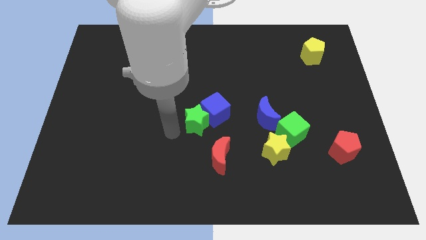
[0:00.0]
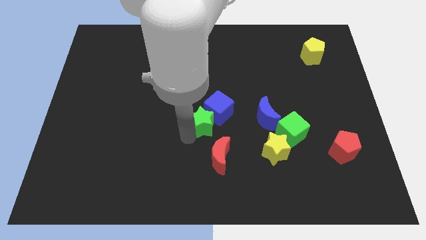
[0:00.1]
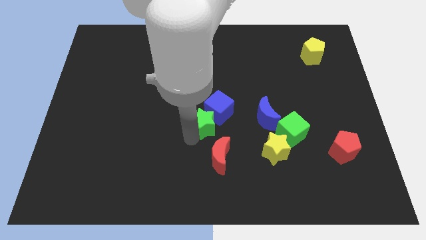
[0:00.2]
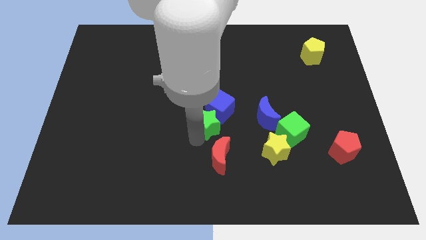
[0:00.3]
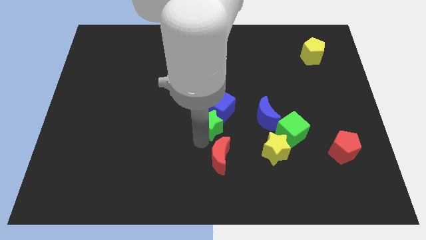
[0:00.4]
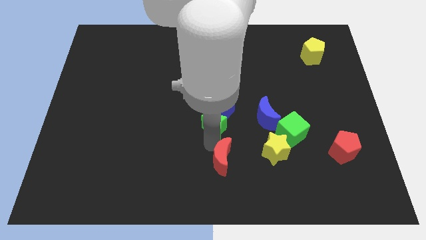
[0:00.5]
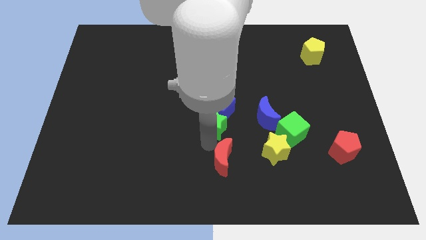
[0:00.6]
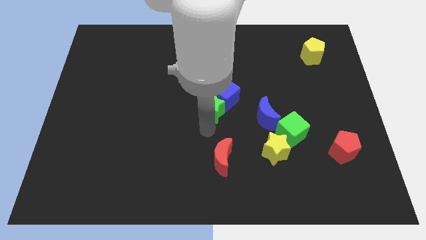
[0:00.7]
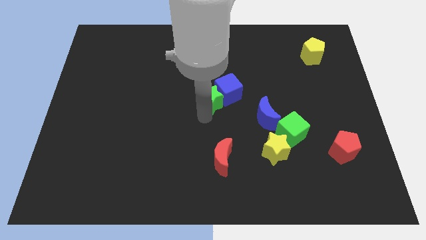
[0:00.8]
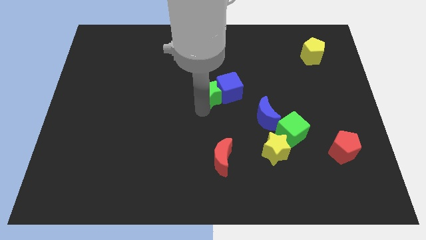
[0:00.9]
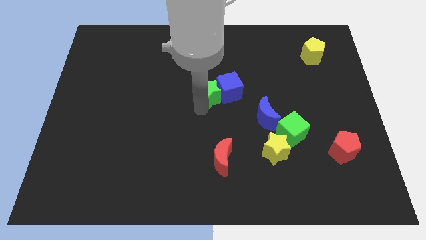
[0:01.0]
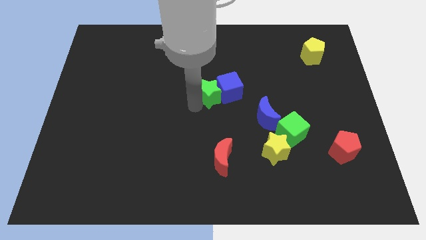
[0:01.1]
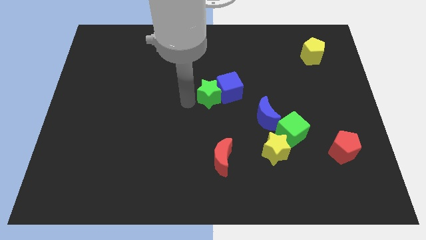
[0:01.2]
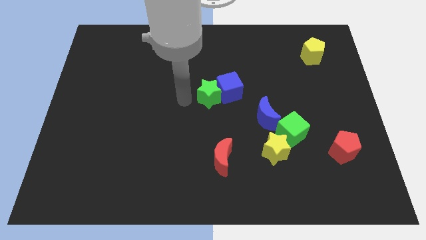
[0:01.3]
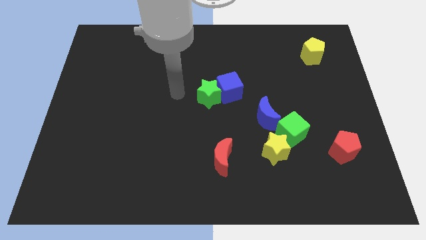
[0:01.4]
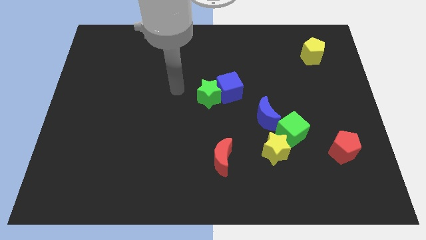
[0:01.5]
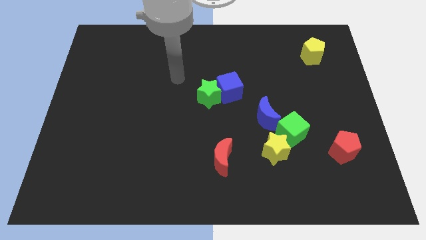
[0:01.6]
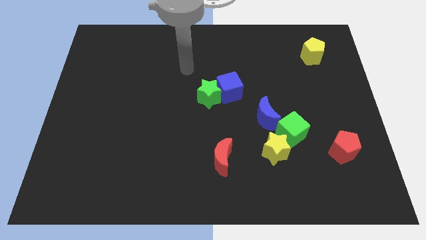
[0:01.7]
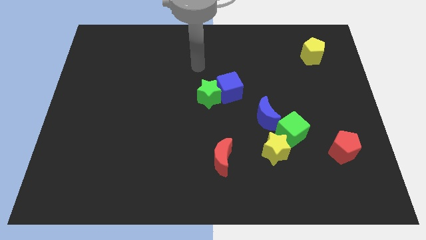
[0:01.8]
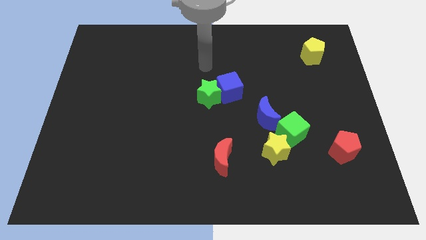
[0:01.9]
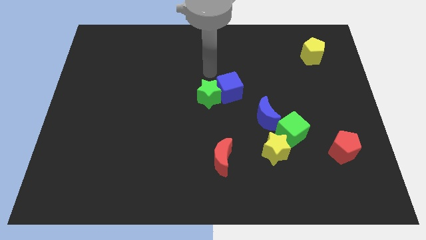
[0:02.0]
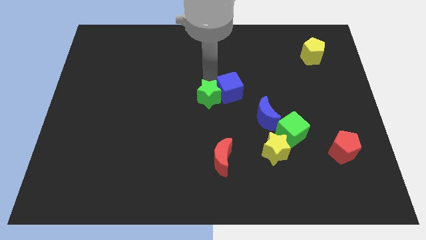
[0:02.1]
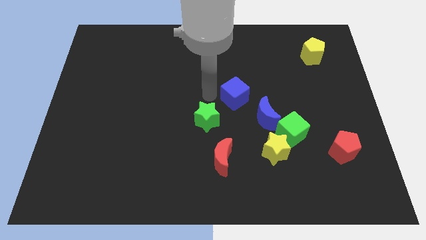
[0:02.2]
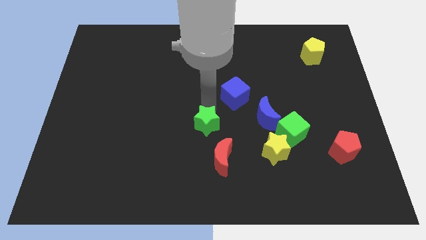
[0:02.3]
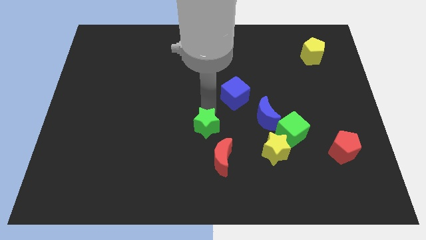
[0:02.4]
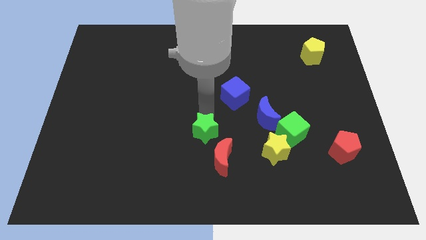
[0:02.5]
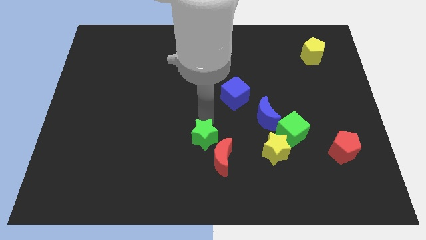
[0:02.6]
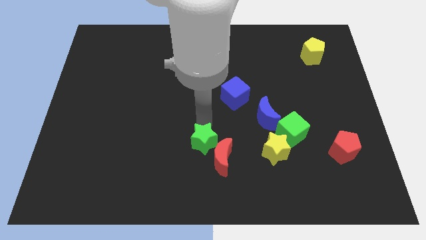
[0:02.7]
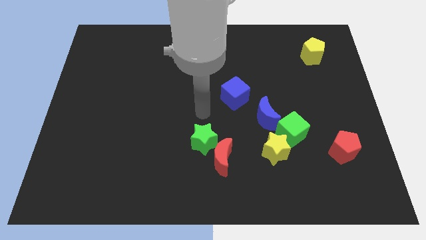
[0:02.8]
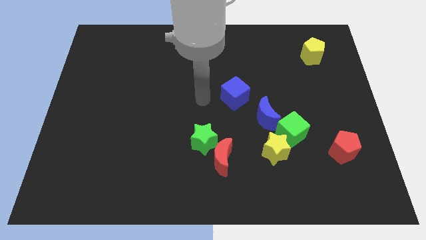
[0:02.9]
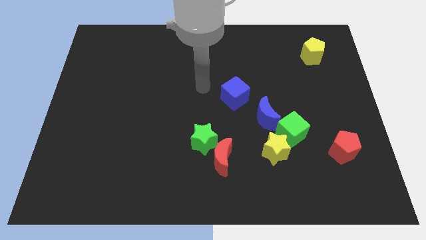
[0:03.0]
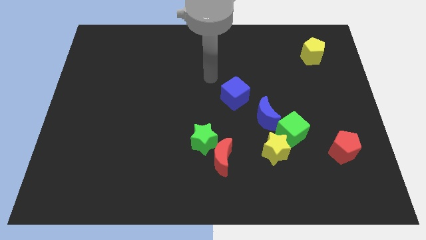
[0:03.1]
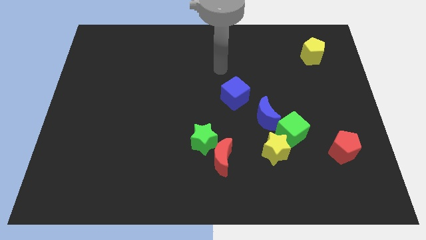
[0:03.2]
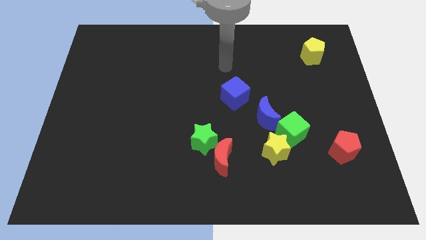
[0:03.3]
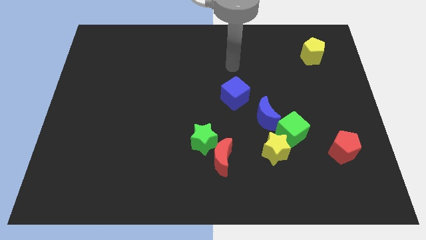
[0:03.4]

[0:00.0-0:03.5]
push the green star downward

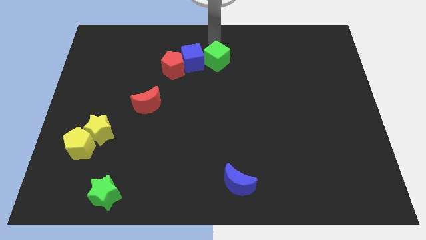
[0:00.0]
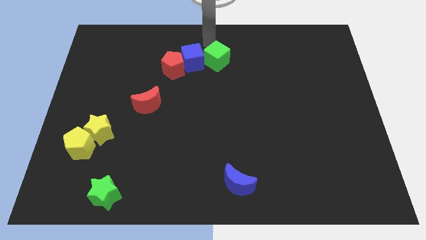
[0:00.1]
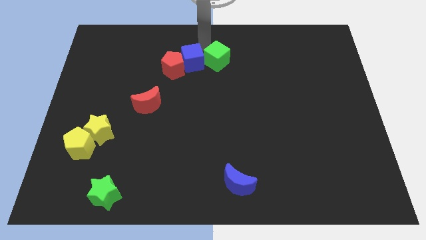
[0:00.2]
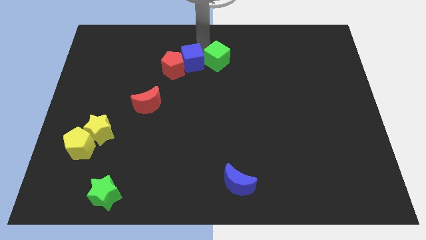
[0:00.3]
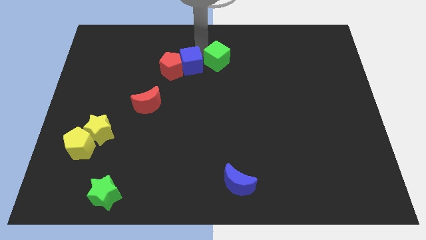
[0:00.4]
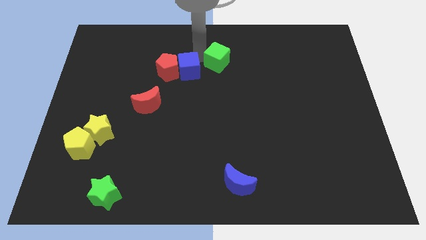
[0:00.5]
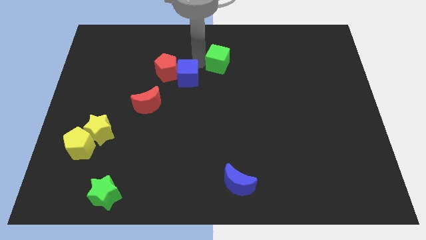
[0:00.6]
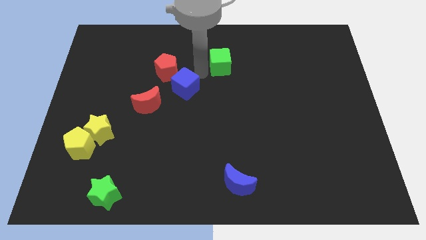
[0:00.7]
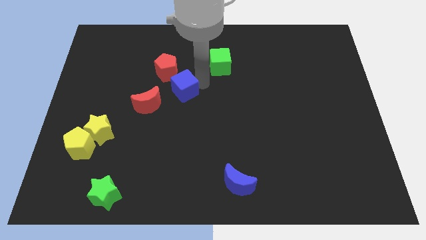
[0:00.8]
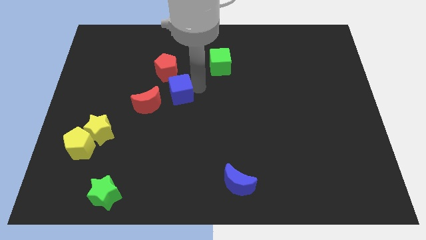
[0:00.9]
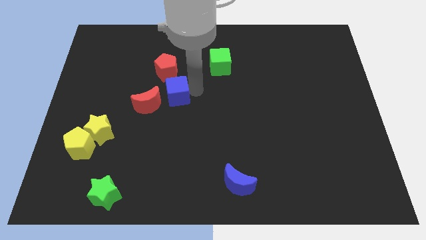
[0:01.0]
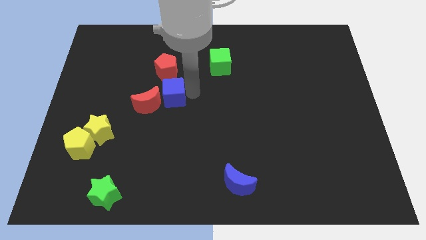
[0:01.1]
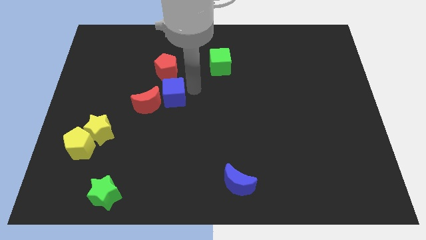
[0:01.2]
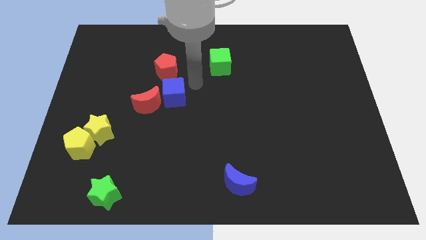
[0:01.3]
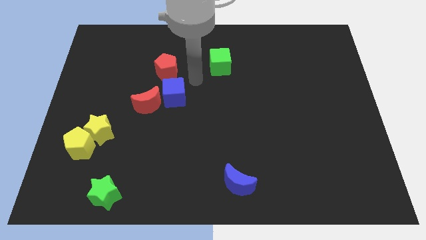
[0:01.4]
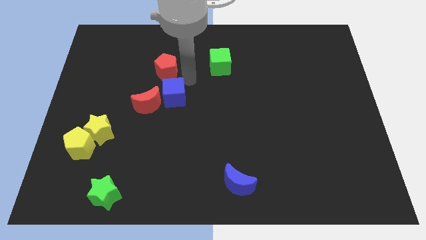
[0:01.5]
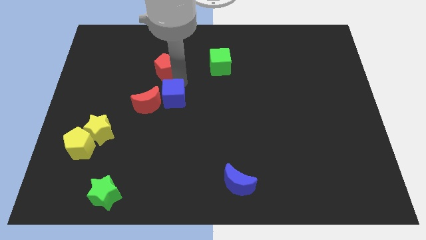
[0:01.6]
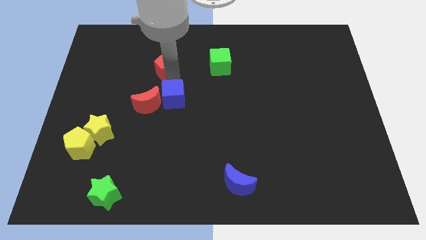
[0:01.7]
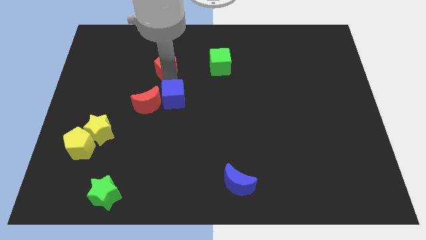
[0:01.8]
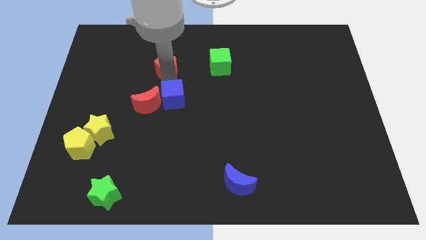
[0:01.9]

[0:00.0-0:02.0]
separate blue cube from green cube

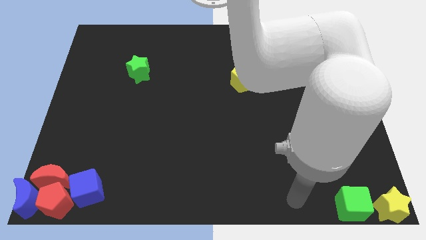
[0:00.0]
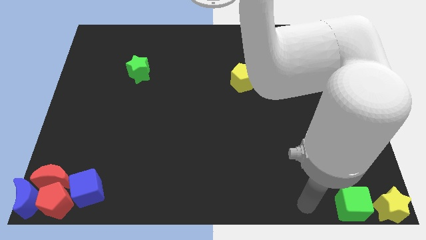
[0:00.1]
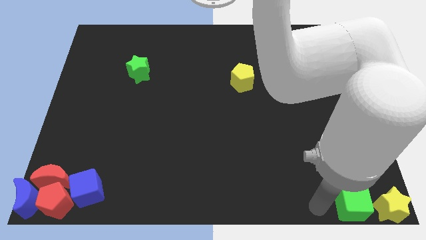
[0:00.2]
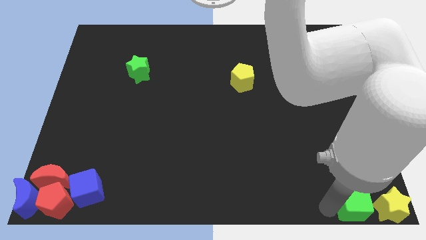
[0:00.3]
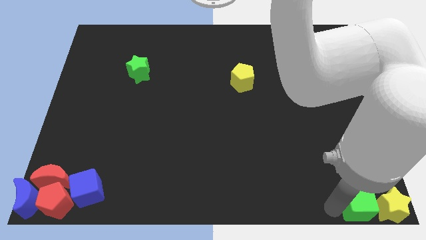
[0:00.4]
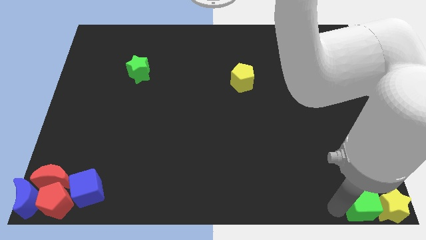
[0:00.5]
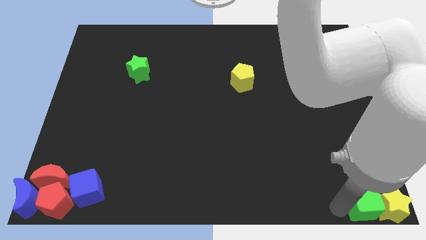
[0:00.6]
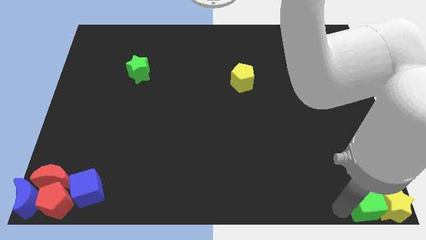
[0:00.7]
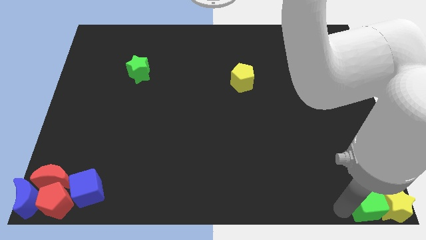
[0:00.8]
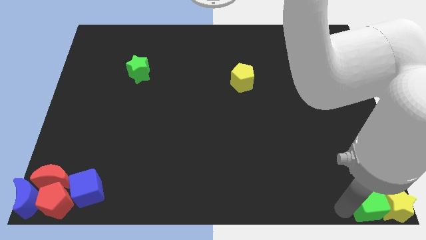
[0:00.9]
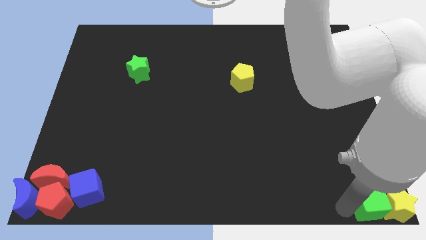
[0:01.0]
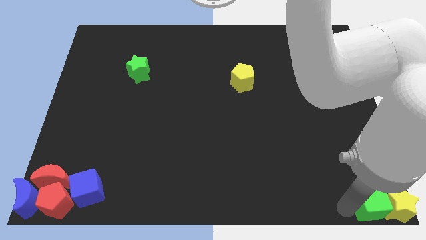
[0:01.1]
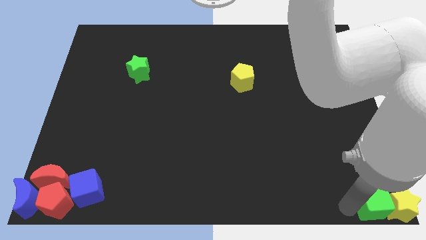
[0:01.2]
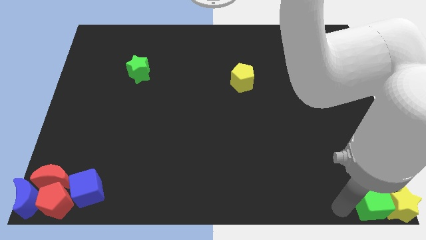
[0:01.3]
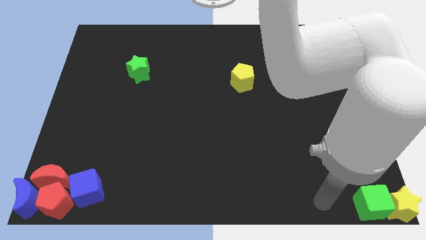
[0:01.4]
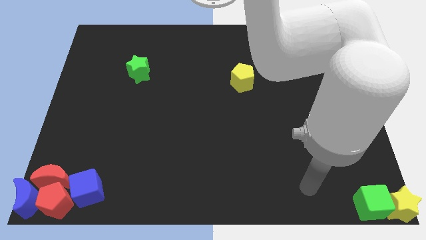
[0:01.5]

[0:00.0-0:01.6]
push the green cube to the bottom right

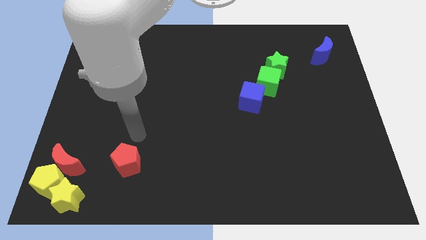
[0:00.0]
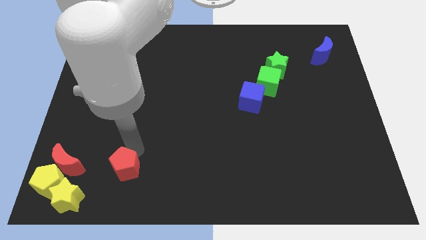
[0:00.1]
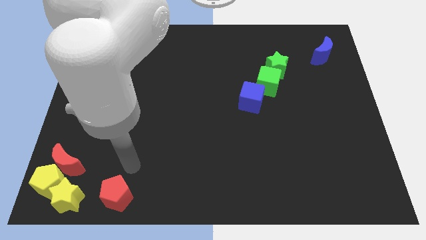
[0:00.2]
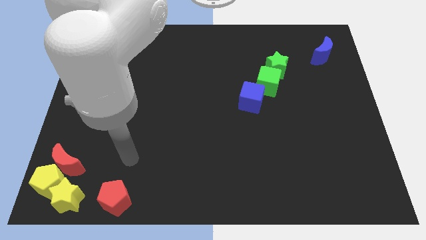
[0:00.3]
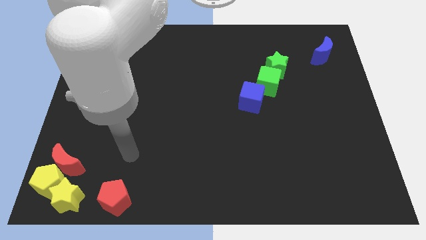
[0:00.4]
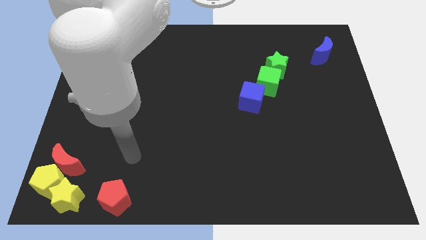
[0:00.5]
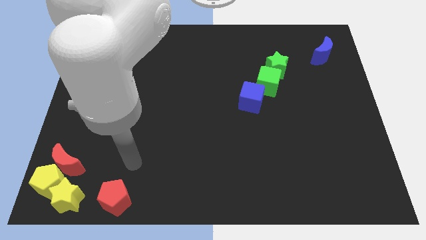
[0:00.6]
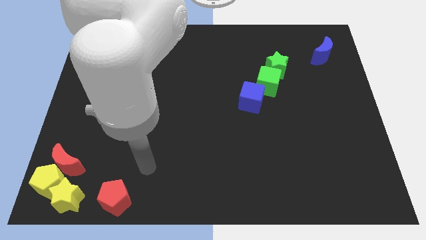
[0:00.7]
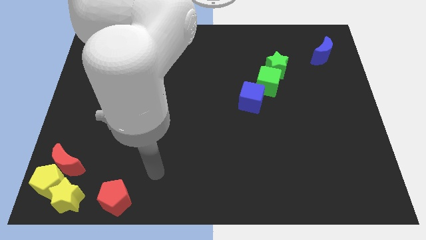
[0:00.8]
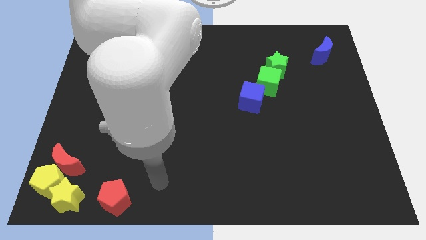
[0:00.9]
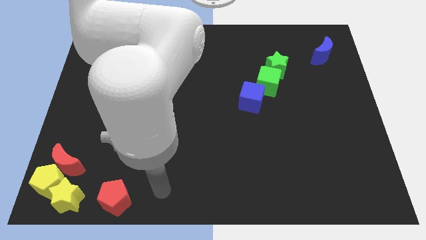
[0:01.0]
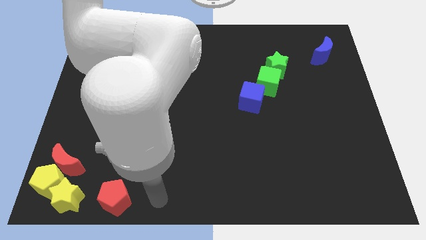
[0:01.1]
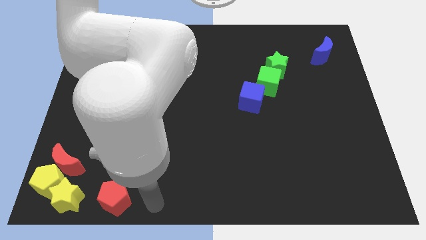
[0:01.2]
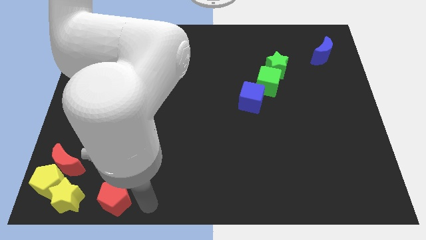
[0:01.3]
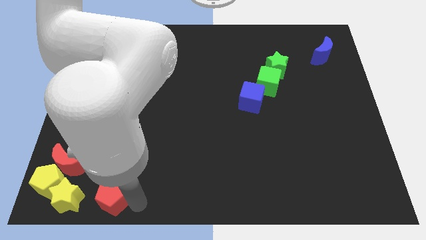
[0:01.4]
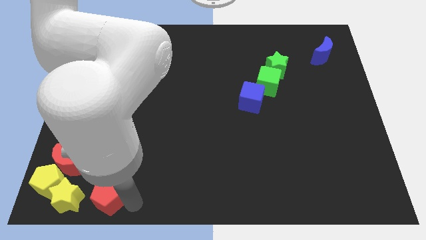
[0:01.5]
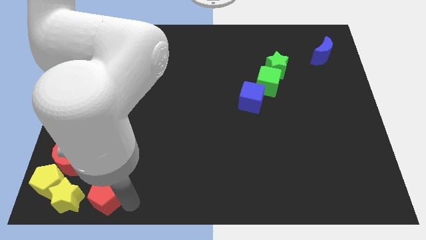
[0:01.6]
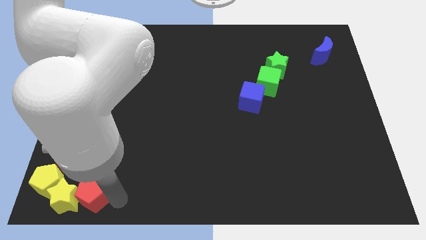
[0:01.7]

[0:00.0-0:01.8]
move the red pentagon into the right side of the yellow star

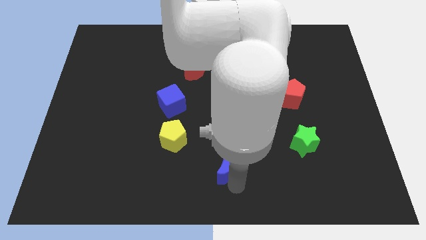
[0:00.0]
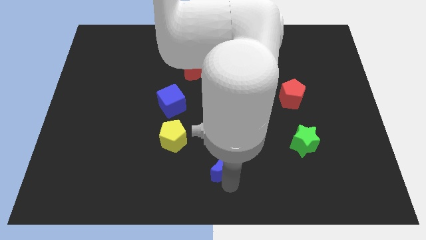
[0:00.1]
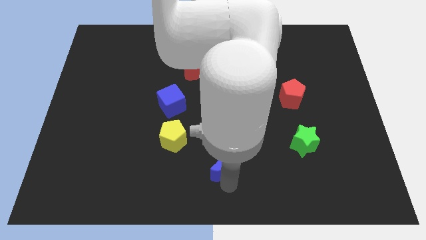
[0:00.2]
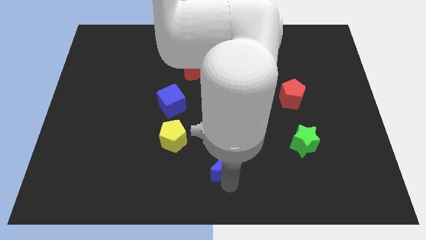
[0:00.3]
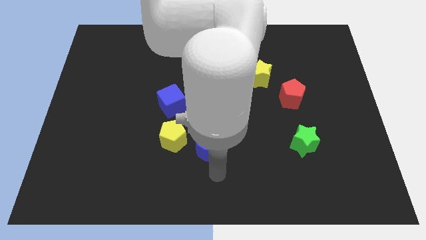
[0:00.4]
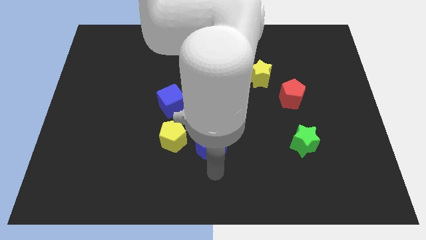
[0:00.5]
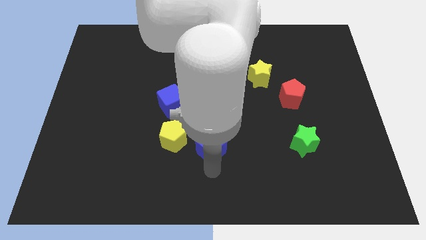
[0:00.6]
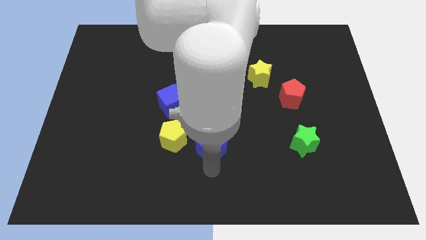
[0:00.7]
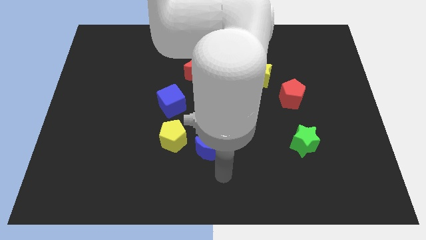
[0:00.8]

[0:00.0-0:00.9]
place the blue crescent to the right side of the yellow pentagon
